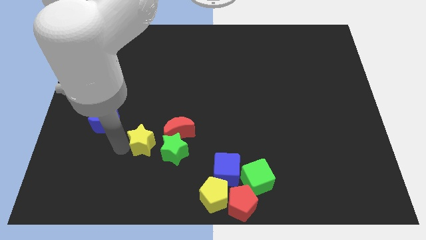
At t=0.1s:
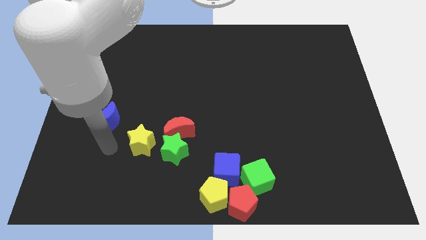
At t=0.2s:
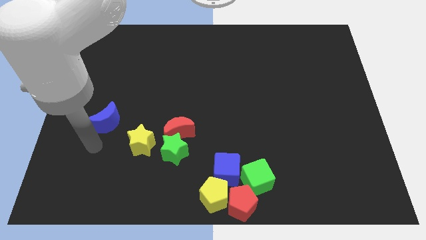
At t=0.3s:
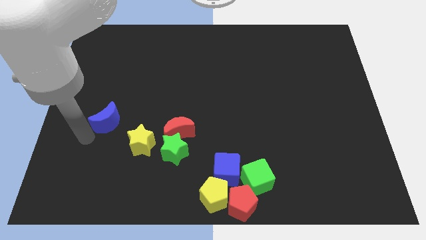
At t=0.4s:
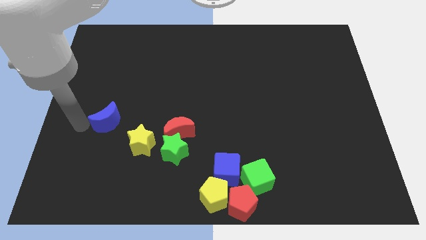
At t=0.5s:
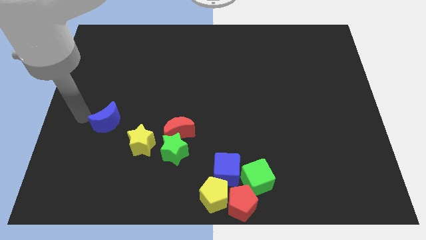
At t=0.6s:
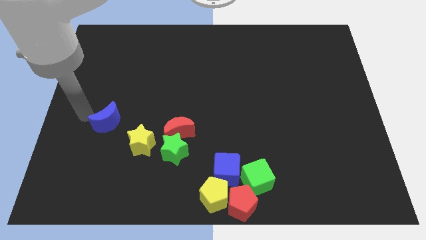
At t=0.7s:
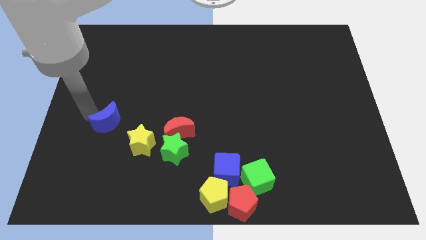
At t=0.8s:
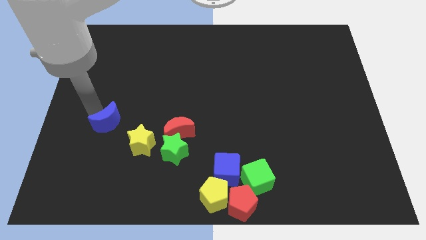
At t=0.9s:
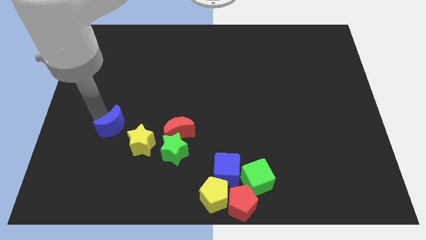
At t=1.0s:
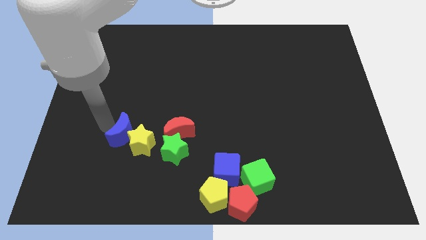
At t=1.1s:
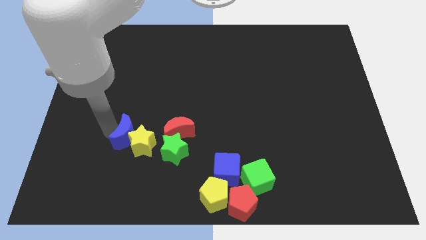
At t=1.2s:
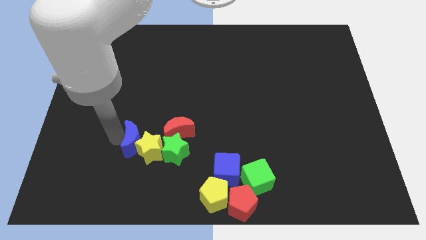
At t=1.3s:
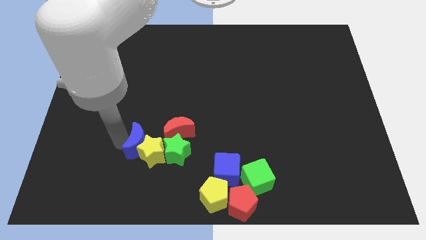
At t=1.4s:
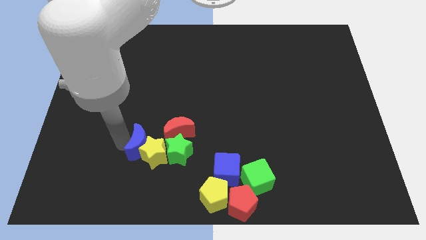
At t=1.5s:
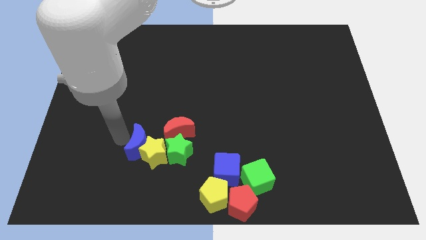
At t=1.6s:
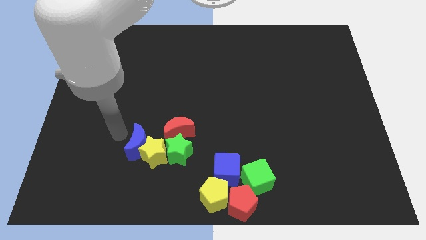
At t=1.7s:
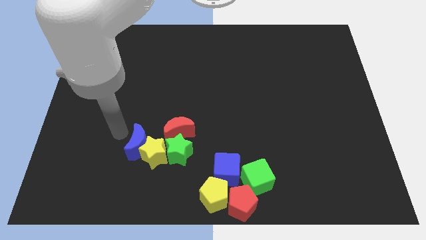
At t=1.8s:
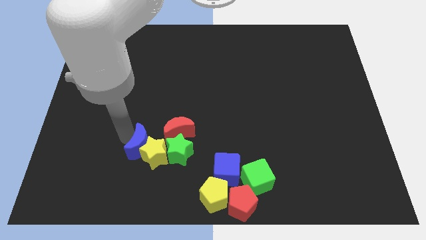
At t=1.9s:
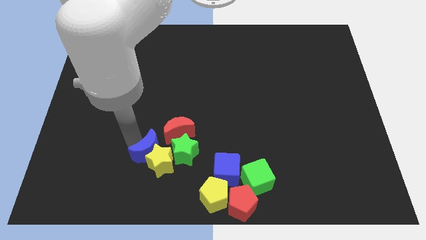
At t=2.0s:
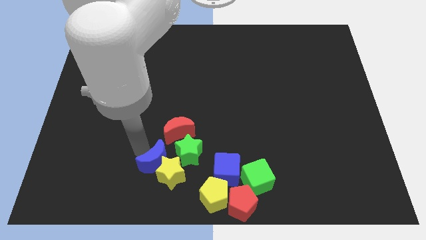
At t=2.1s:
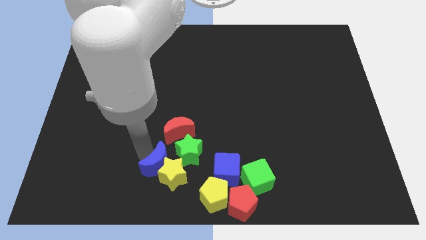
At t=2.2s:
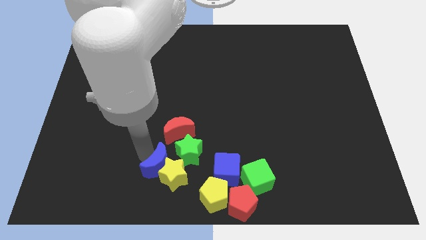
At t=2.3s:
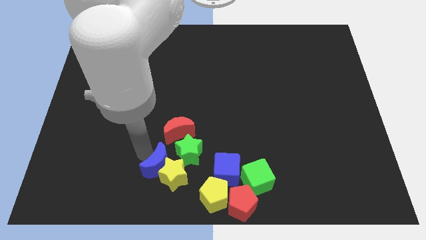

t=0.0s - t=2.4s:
move blue moon into the yellow star

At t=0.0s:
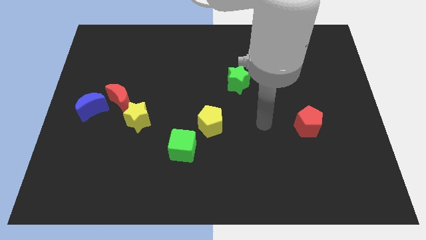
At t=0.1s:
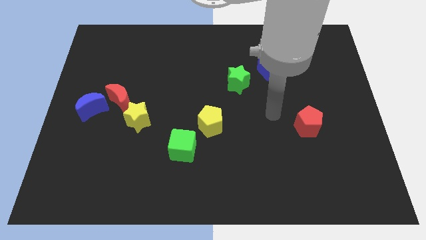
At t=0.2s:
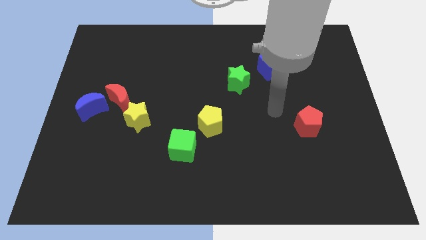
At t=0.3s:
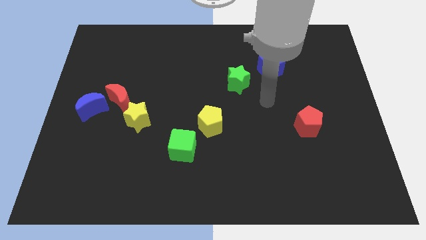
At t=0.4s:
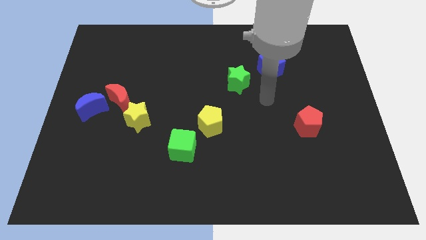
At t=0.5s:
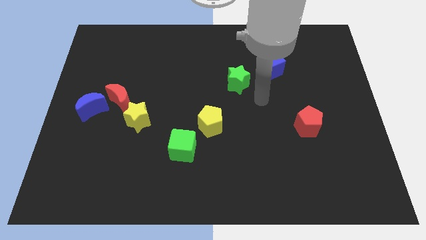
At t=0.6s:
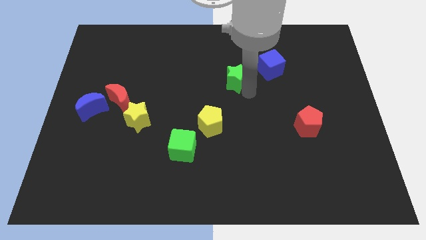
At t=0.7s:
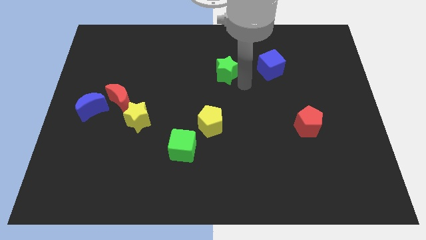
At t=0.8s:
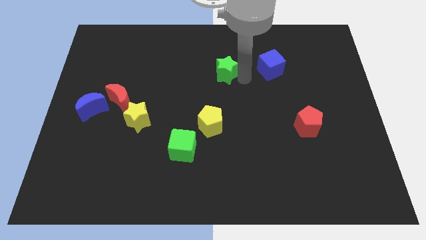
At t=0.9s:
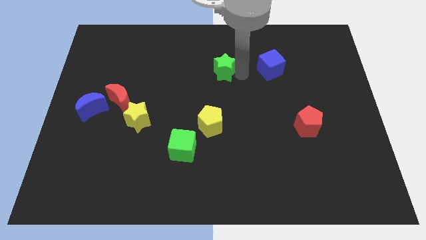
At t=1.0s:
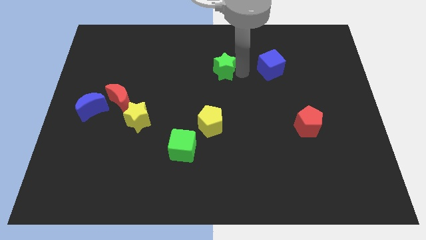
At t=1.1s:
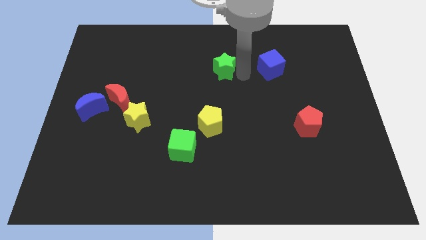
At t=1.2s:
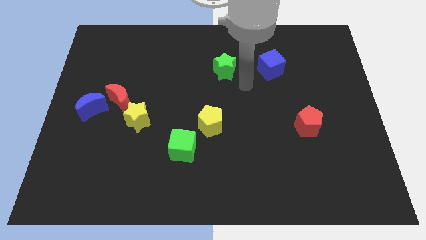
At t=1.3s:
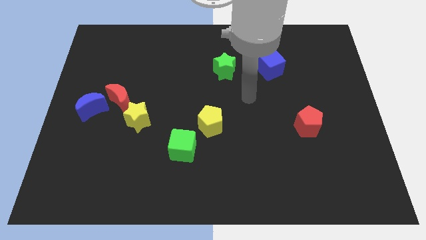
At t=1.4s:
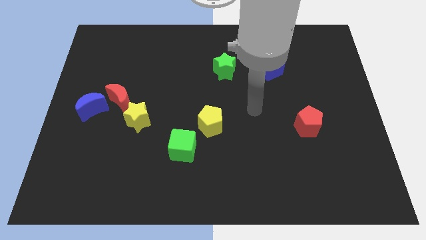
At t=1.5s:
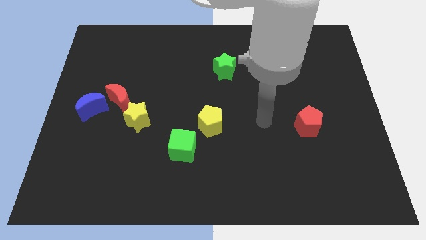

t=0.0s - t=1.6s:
push the green star slightly towards top side

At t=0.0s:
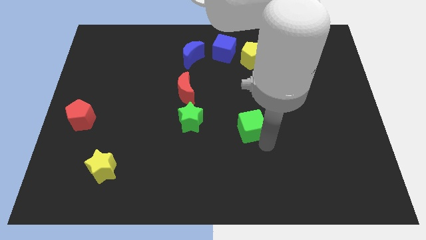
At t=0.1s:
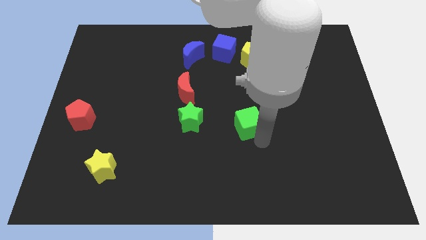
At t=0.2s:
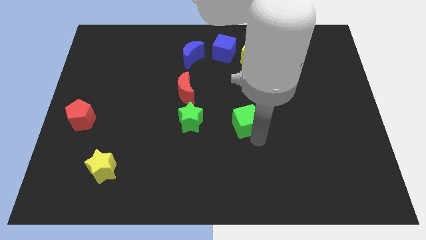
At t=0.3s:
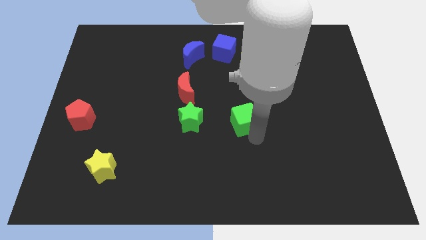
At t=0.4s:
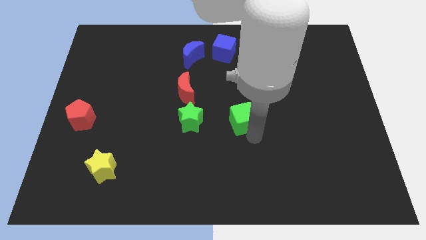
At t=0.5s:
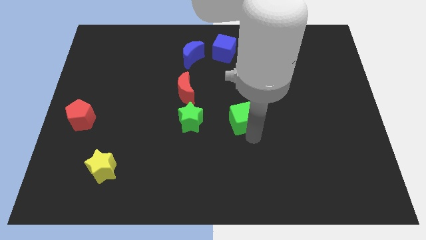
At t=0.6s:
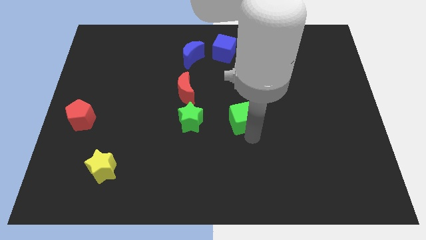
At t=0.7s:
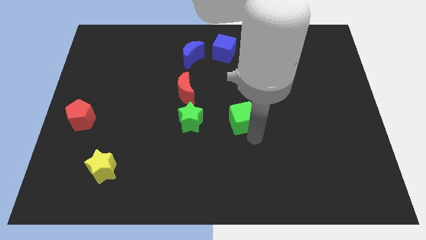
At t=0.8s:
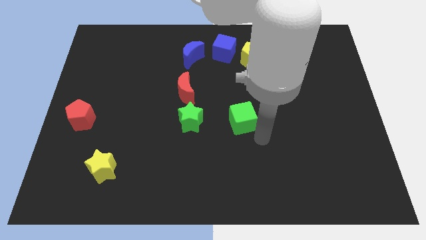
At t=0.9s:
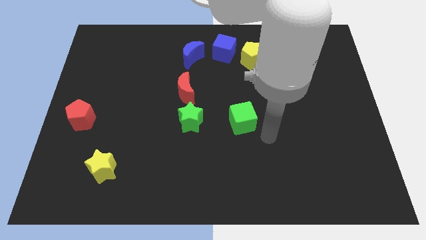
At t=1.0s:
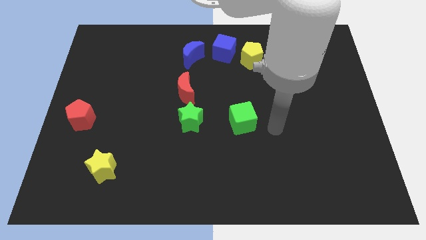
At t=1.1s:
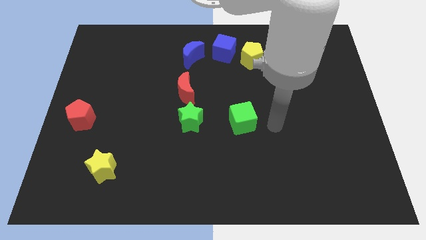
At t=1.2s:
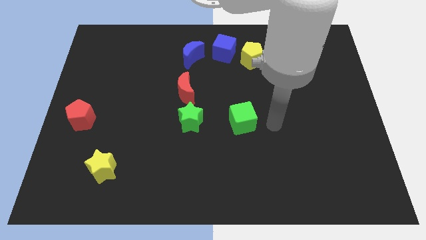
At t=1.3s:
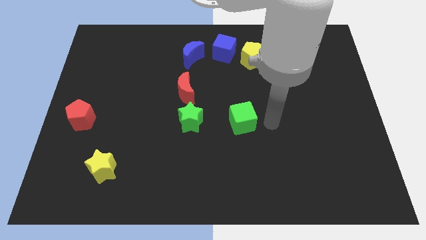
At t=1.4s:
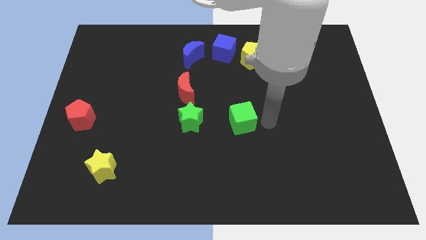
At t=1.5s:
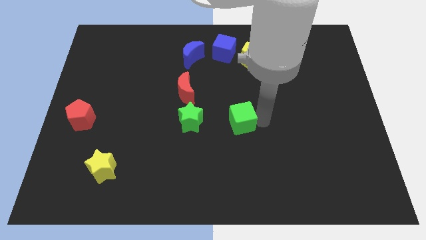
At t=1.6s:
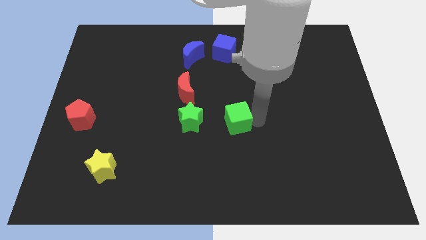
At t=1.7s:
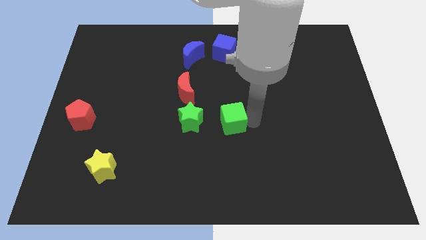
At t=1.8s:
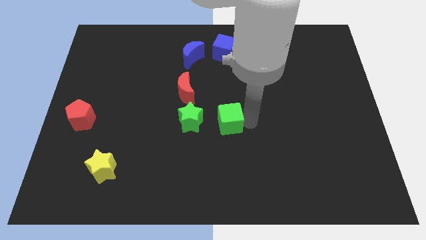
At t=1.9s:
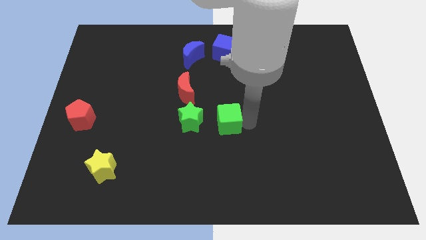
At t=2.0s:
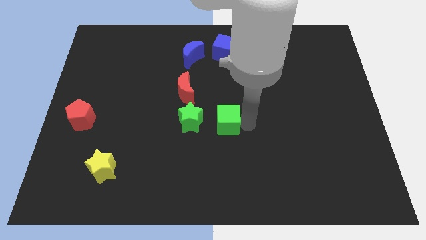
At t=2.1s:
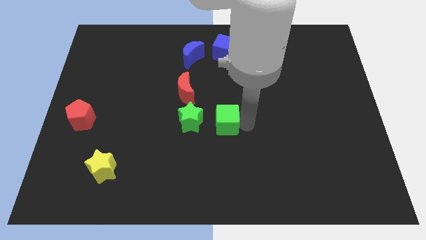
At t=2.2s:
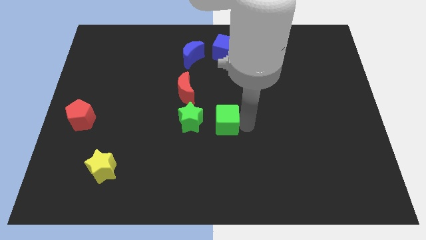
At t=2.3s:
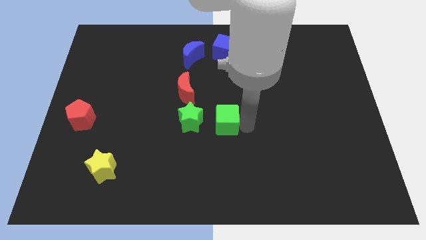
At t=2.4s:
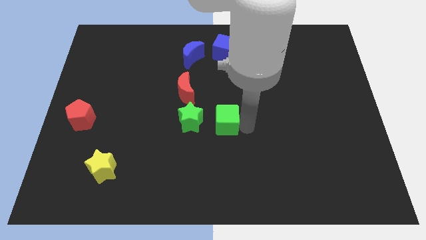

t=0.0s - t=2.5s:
place green cube beside green star

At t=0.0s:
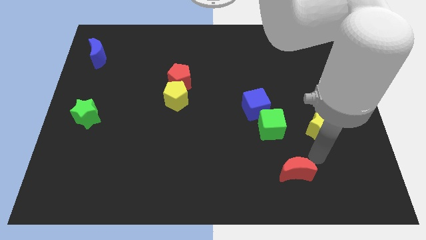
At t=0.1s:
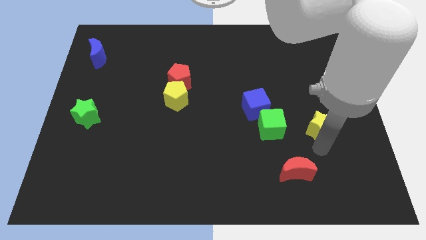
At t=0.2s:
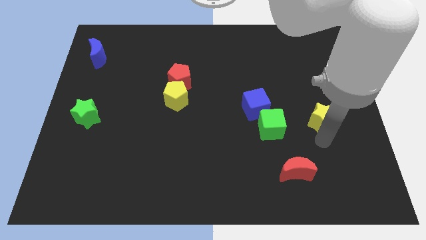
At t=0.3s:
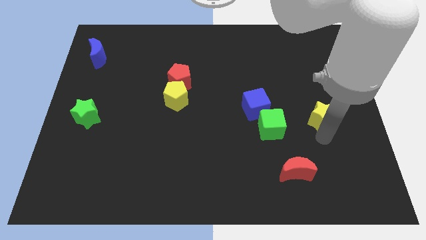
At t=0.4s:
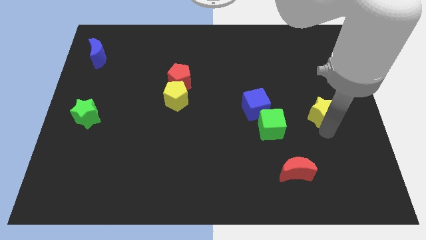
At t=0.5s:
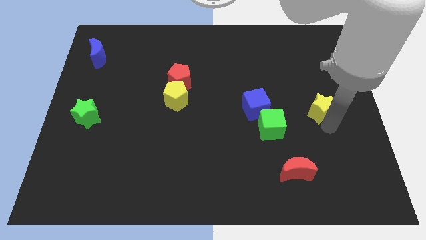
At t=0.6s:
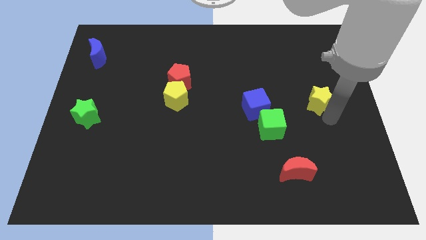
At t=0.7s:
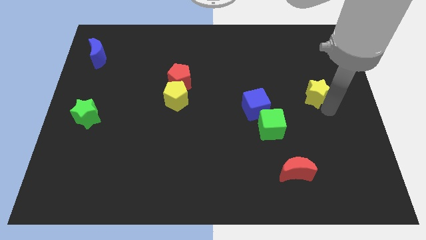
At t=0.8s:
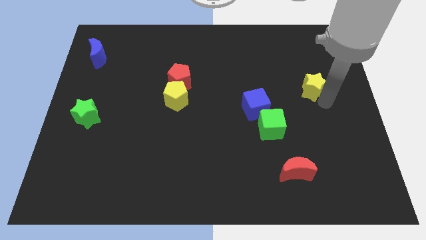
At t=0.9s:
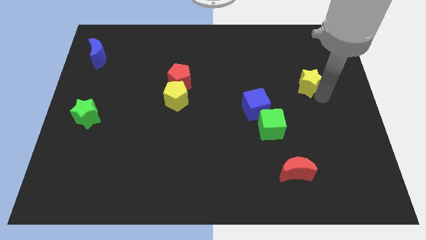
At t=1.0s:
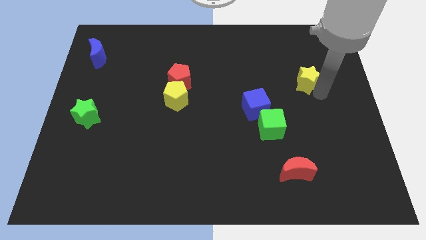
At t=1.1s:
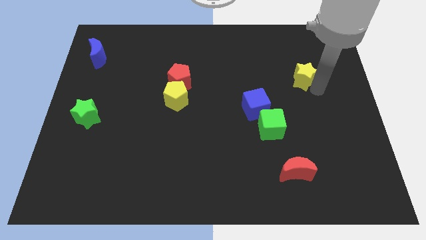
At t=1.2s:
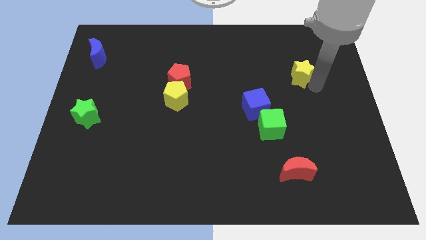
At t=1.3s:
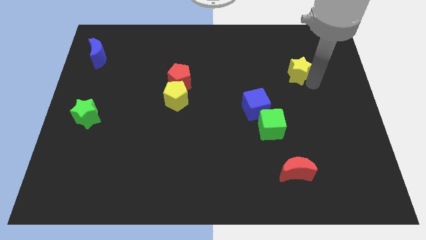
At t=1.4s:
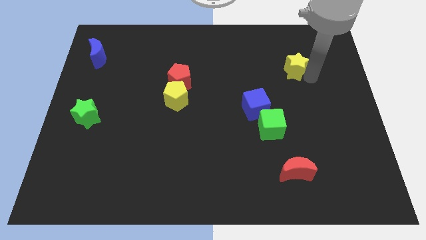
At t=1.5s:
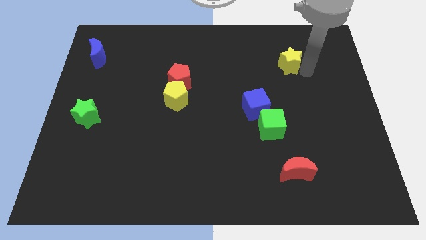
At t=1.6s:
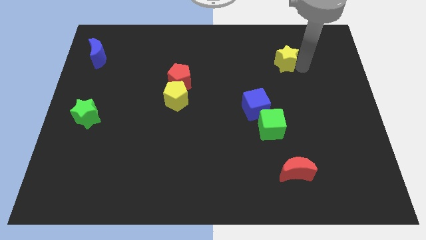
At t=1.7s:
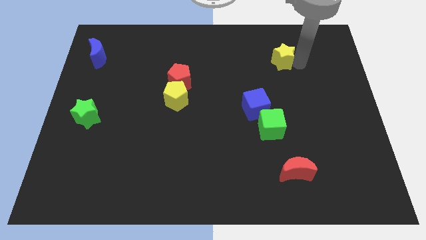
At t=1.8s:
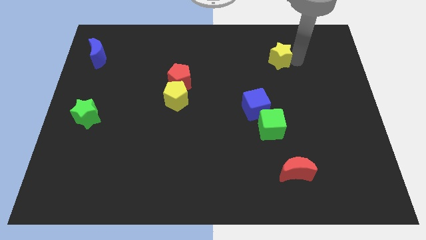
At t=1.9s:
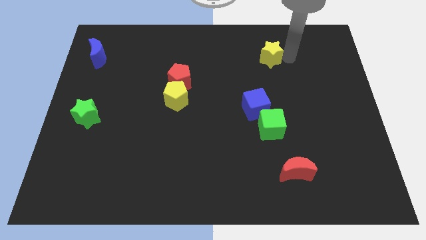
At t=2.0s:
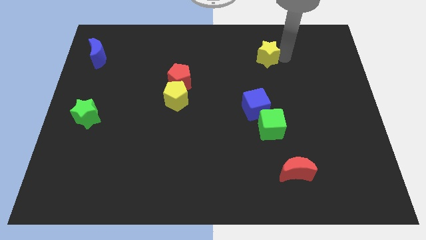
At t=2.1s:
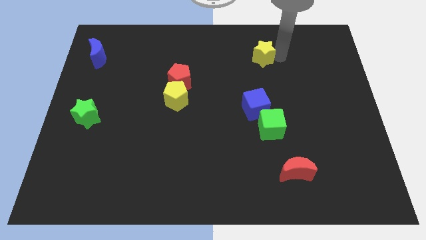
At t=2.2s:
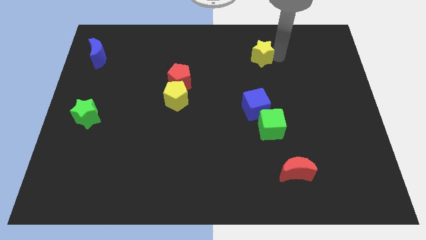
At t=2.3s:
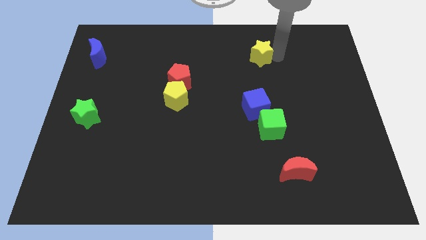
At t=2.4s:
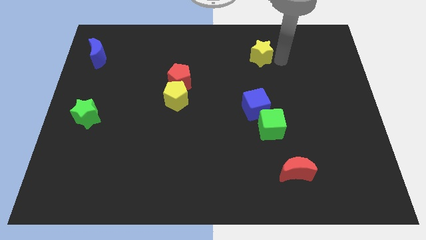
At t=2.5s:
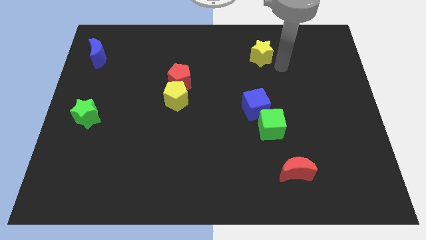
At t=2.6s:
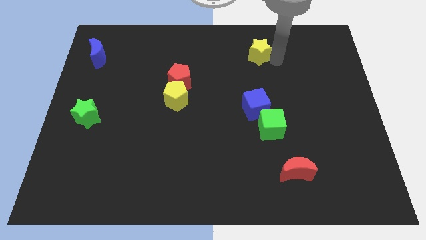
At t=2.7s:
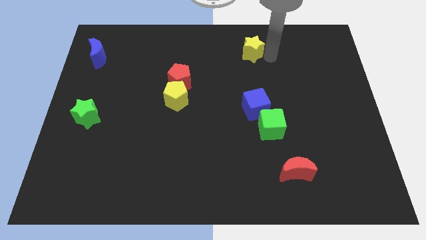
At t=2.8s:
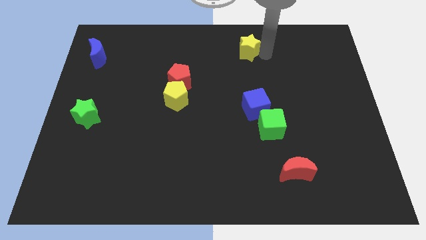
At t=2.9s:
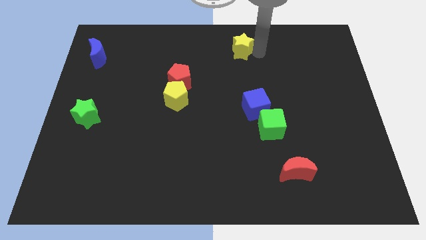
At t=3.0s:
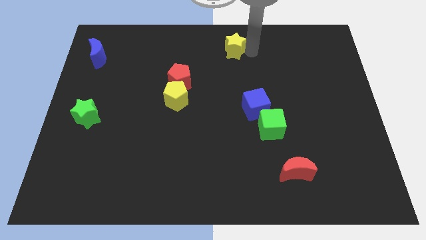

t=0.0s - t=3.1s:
put the yellow star vertically above the blue cube
